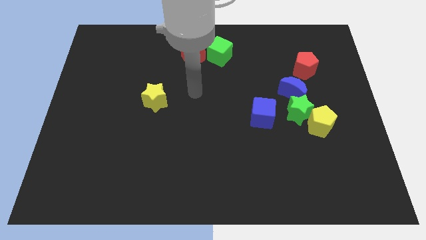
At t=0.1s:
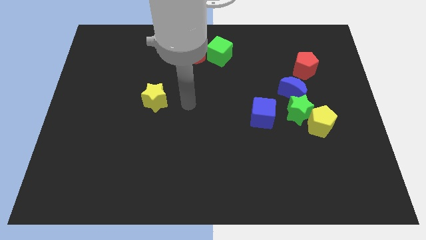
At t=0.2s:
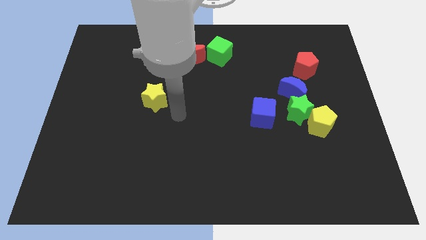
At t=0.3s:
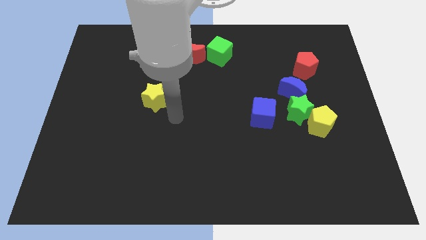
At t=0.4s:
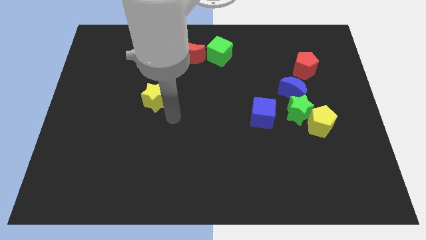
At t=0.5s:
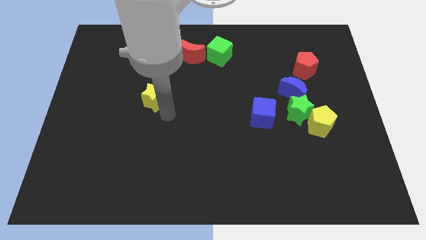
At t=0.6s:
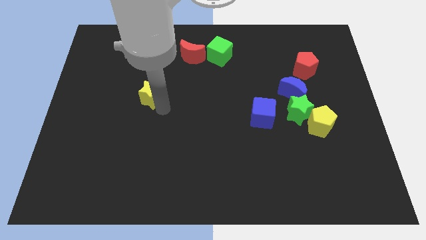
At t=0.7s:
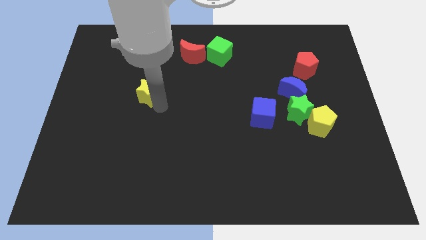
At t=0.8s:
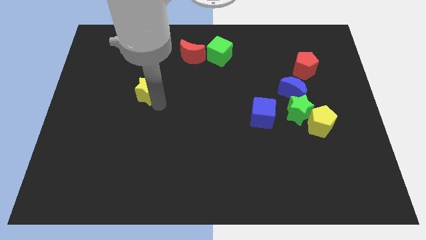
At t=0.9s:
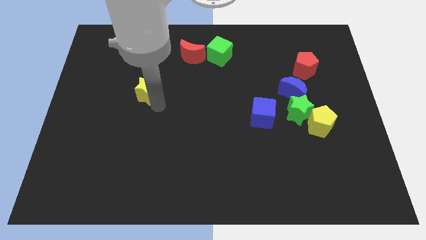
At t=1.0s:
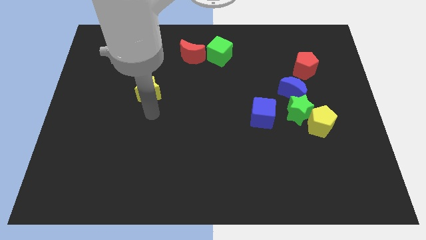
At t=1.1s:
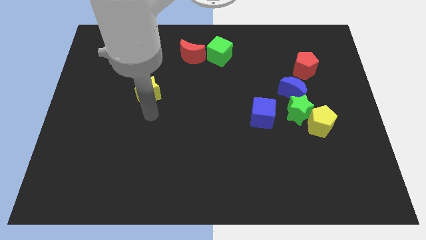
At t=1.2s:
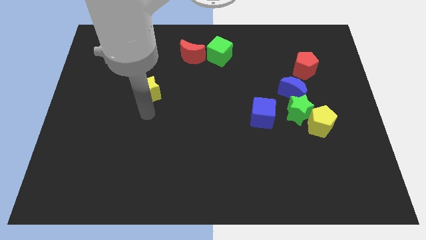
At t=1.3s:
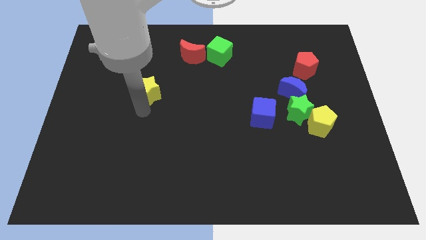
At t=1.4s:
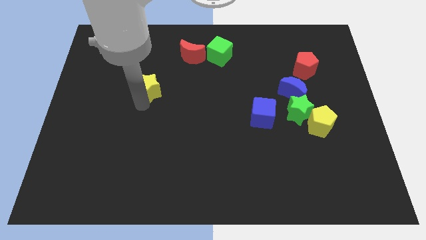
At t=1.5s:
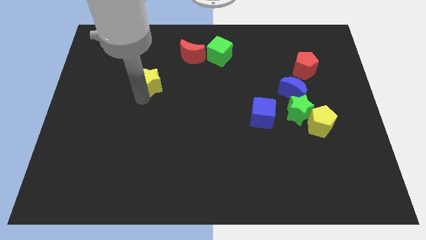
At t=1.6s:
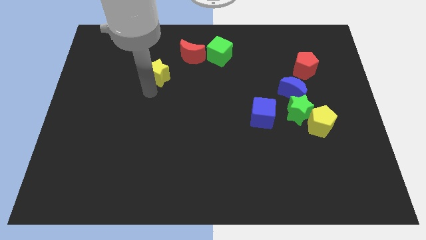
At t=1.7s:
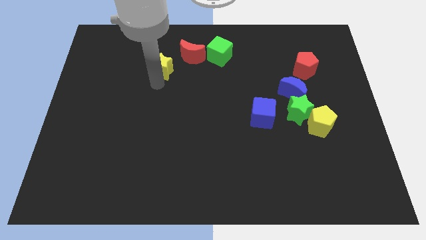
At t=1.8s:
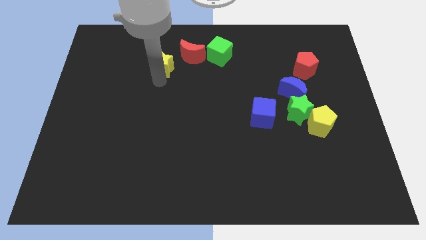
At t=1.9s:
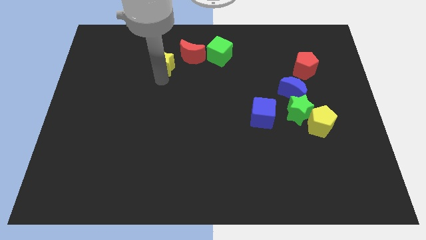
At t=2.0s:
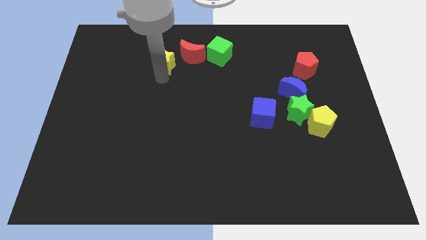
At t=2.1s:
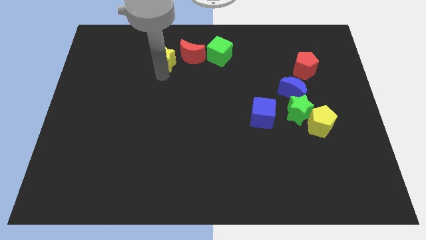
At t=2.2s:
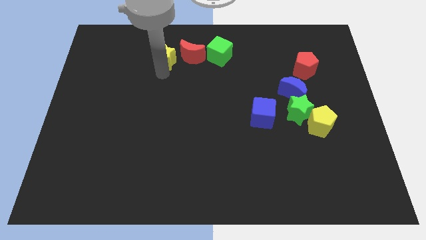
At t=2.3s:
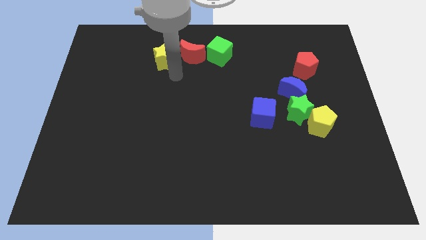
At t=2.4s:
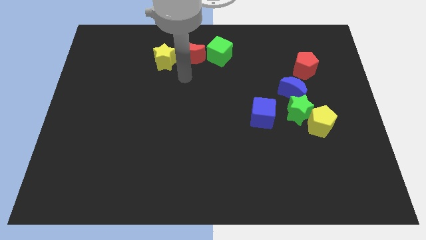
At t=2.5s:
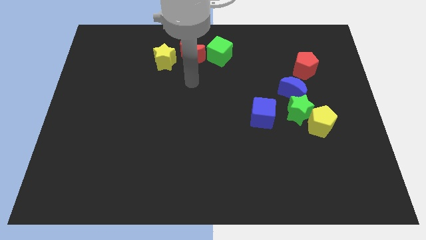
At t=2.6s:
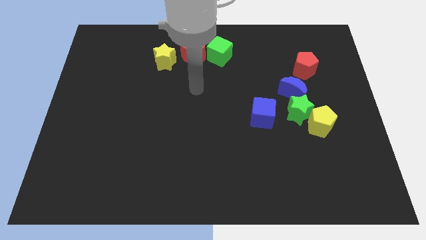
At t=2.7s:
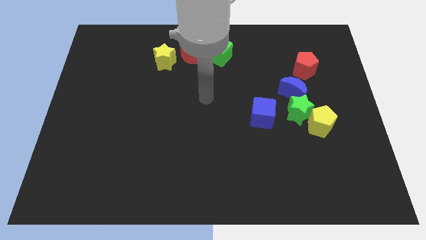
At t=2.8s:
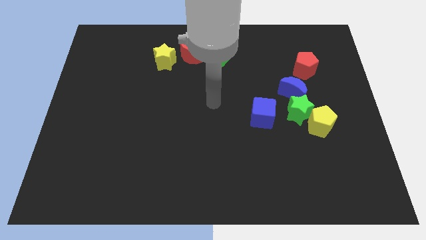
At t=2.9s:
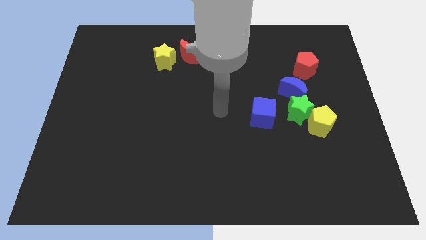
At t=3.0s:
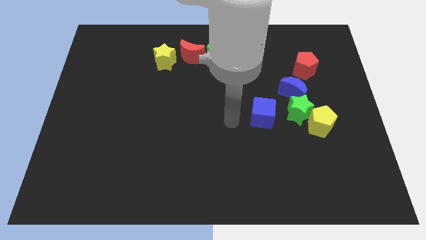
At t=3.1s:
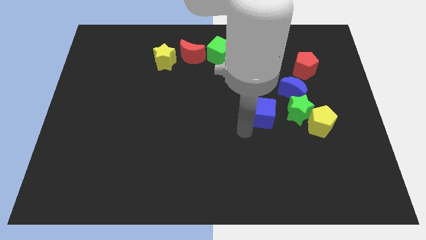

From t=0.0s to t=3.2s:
put the yellow star to the left side of the red moon

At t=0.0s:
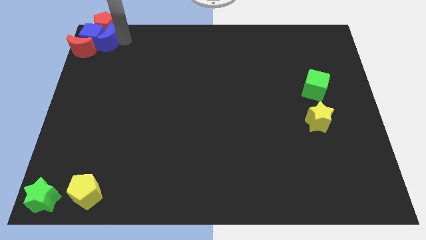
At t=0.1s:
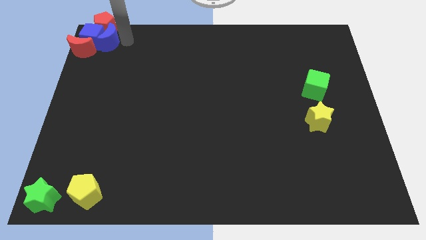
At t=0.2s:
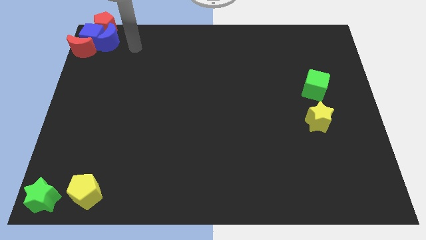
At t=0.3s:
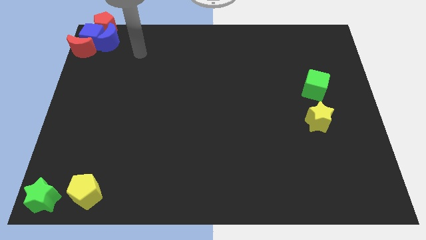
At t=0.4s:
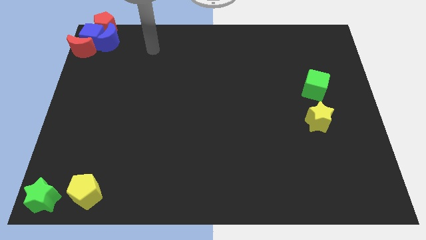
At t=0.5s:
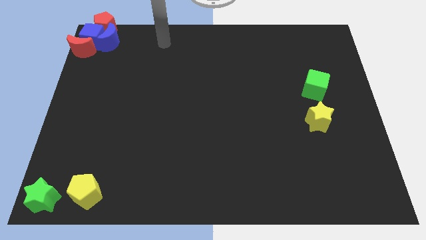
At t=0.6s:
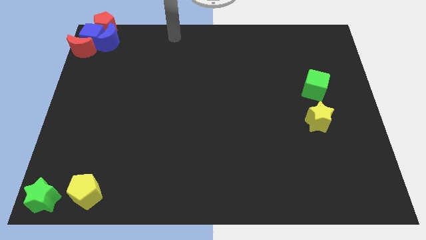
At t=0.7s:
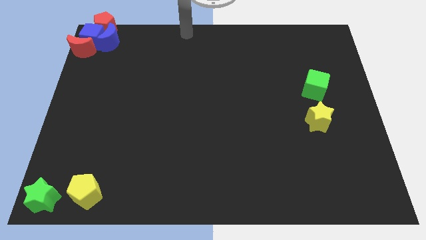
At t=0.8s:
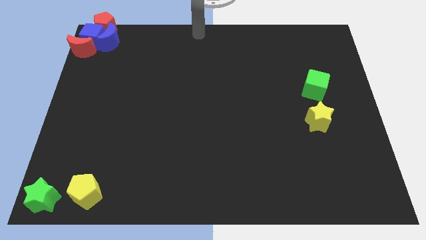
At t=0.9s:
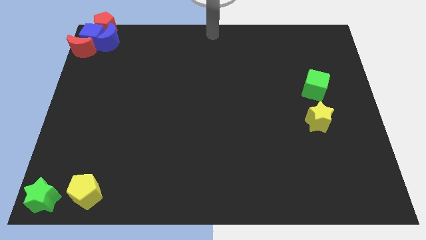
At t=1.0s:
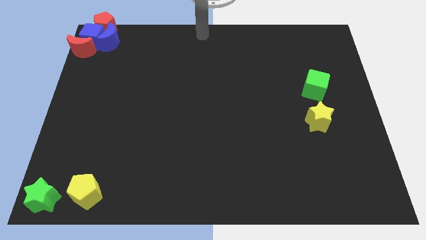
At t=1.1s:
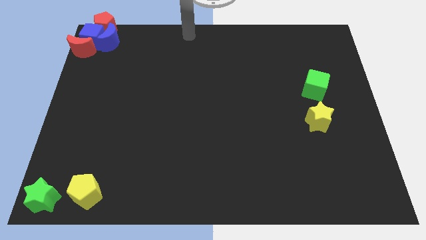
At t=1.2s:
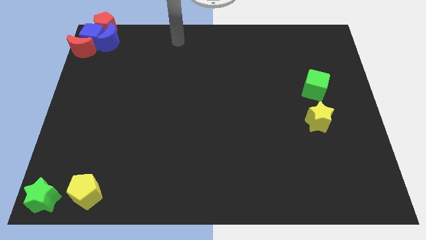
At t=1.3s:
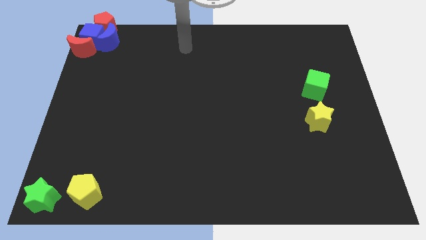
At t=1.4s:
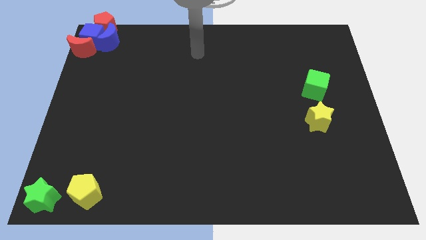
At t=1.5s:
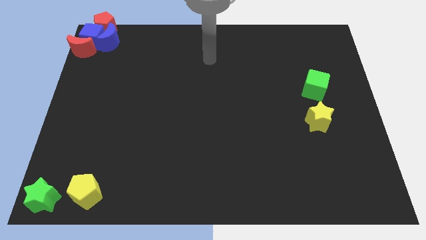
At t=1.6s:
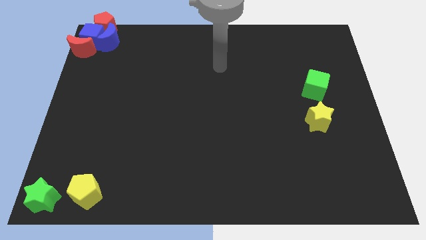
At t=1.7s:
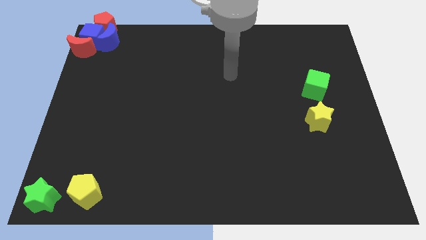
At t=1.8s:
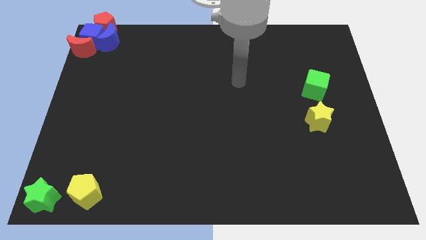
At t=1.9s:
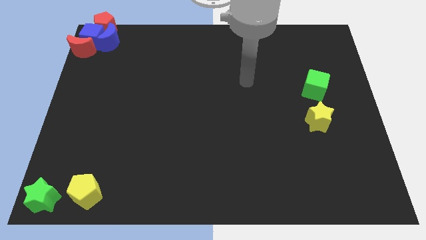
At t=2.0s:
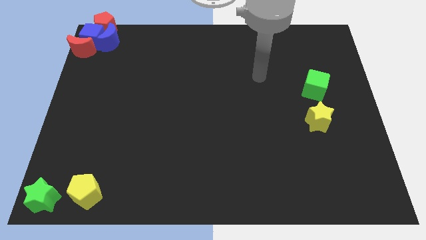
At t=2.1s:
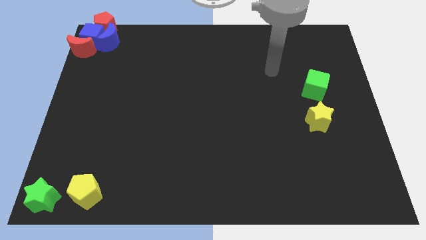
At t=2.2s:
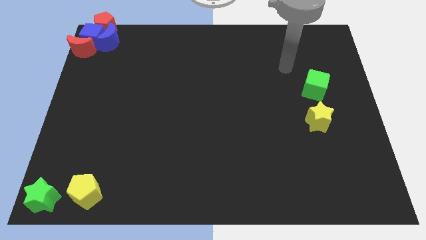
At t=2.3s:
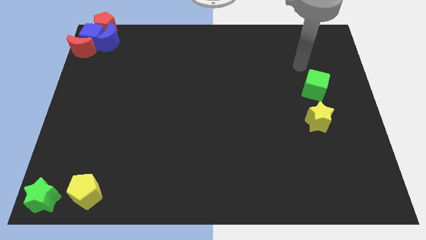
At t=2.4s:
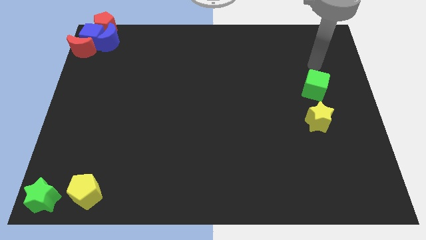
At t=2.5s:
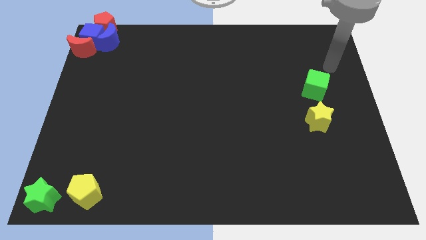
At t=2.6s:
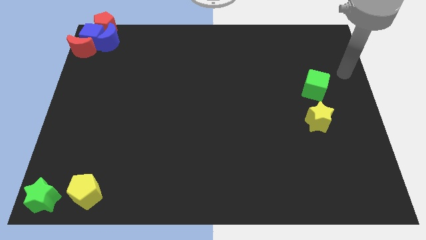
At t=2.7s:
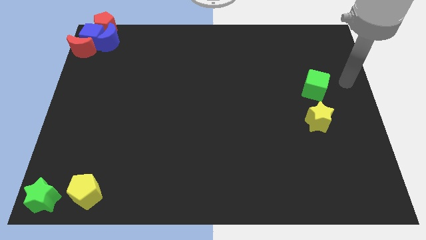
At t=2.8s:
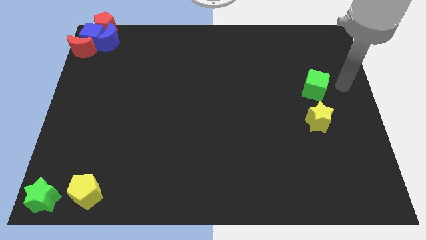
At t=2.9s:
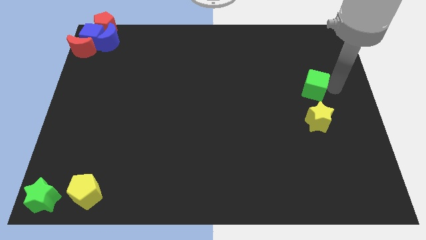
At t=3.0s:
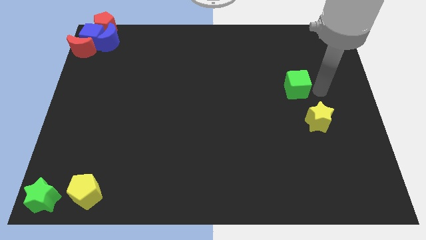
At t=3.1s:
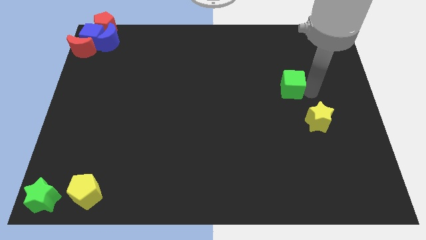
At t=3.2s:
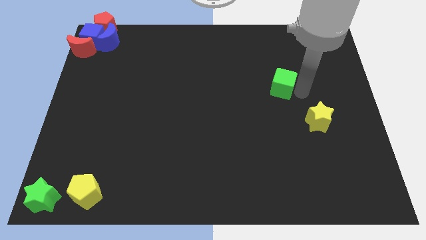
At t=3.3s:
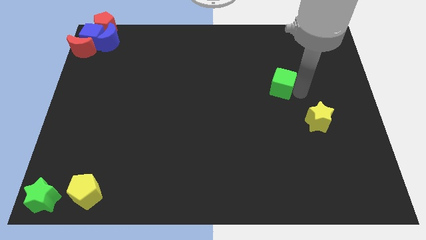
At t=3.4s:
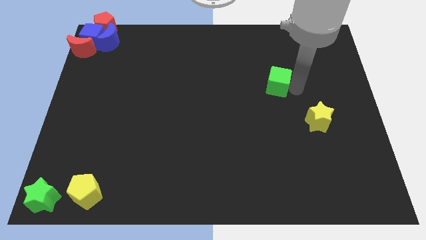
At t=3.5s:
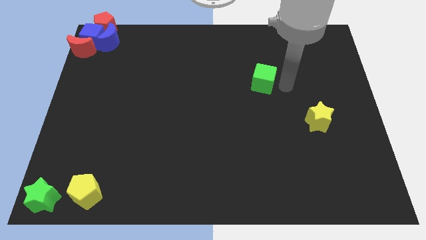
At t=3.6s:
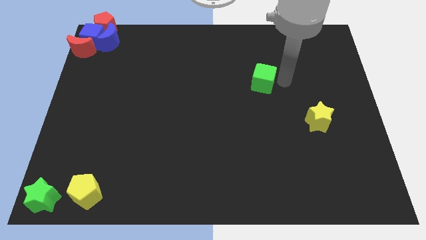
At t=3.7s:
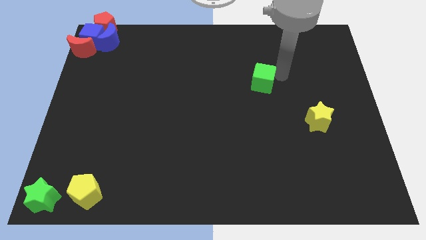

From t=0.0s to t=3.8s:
move the green cube away from the top side of the yellow star

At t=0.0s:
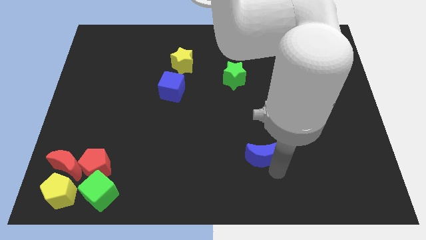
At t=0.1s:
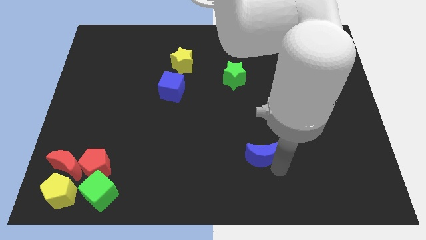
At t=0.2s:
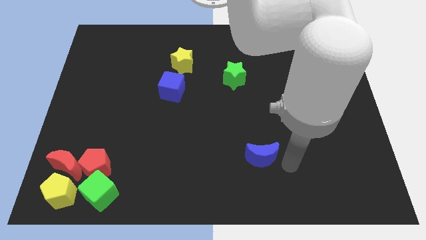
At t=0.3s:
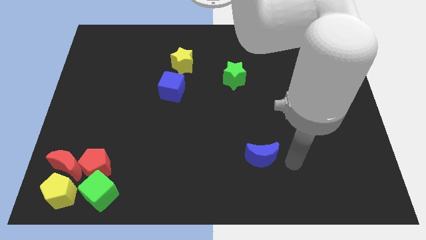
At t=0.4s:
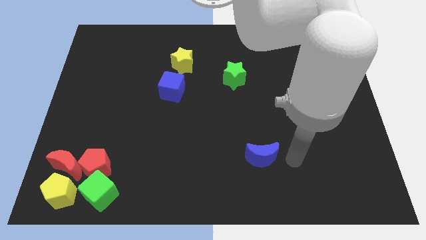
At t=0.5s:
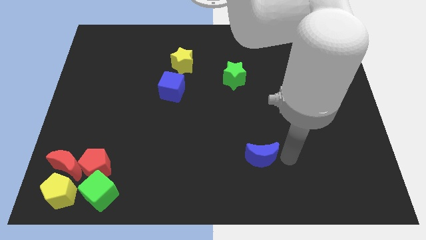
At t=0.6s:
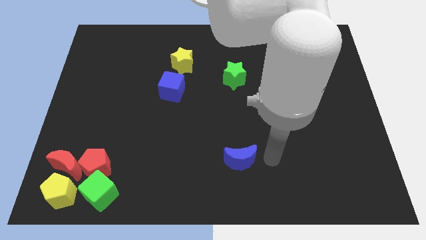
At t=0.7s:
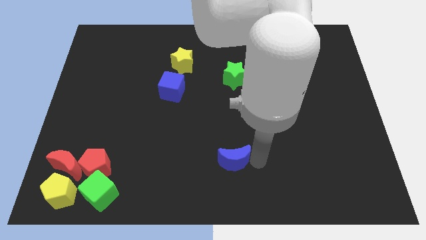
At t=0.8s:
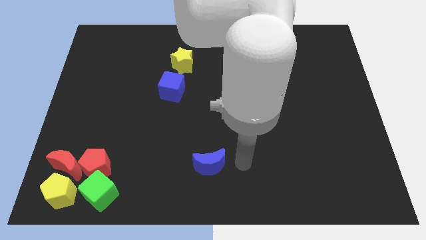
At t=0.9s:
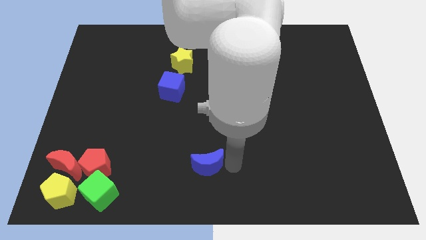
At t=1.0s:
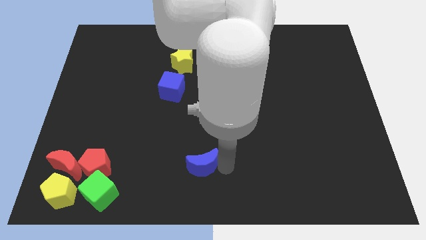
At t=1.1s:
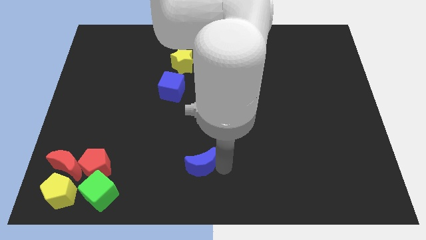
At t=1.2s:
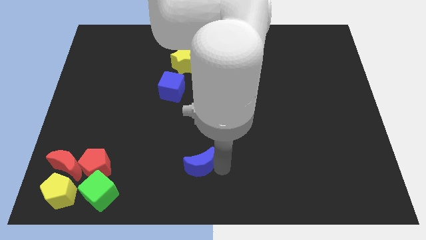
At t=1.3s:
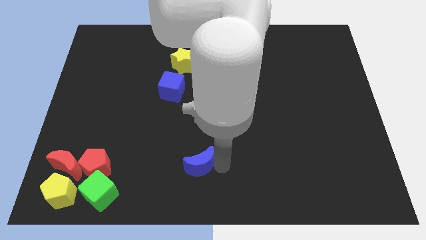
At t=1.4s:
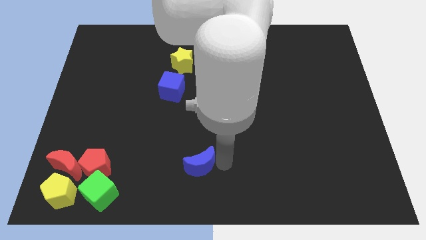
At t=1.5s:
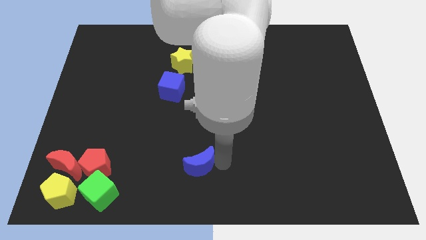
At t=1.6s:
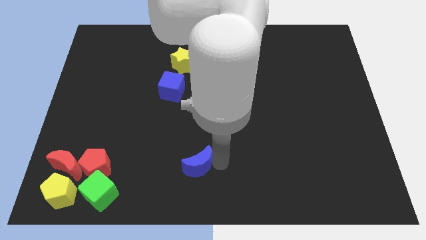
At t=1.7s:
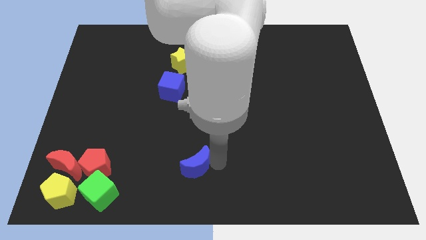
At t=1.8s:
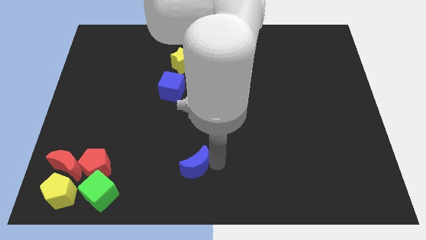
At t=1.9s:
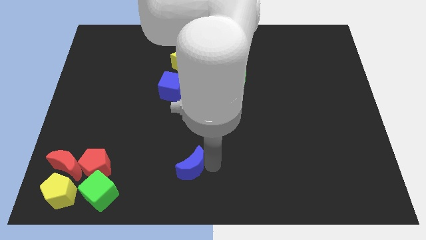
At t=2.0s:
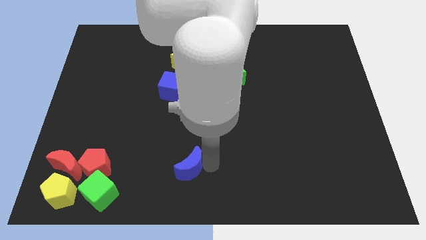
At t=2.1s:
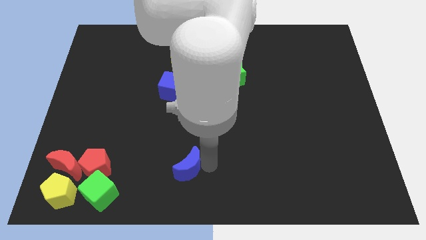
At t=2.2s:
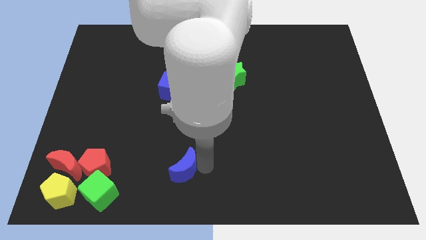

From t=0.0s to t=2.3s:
move the blue moon to the right of red pentagon
